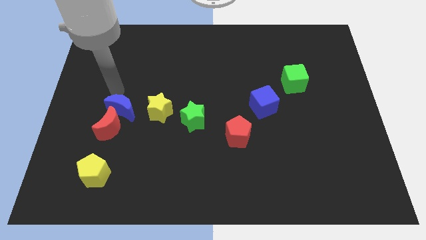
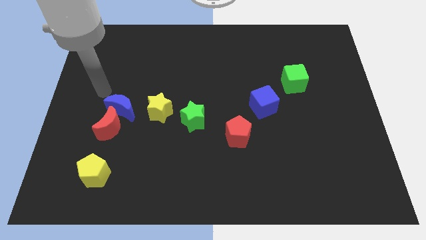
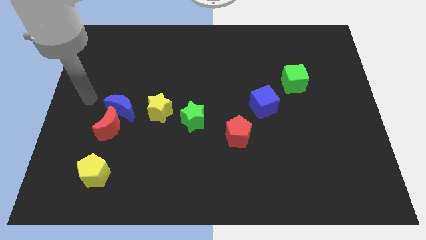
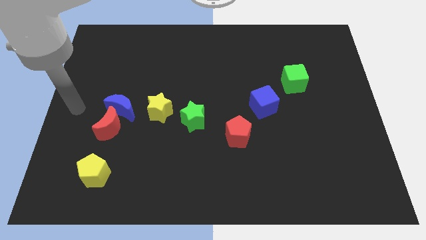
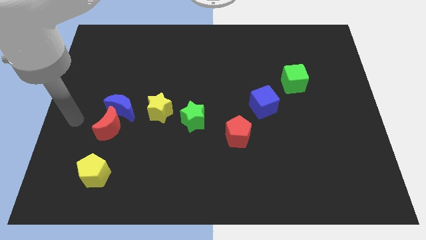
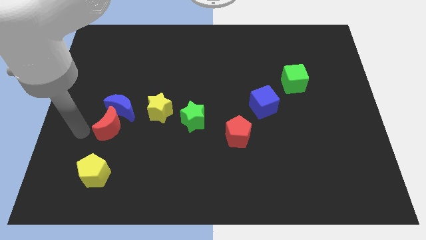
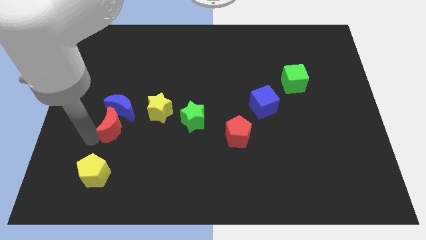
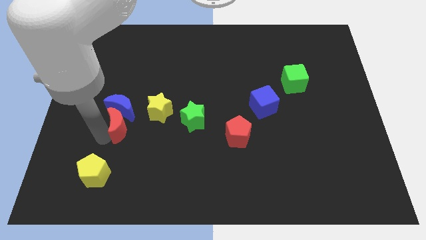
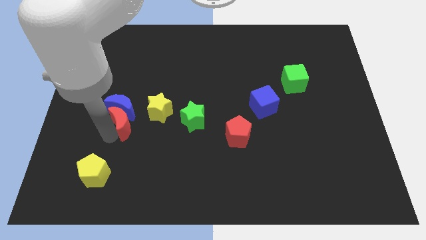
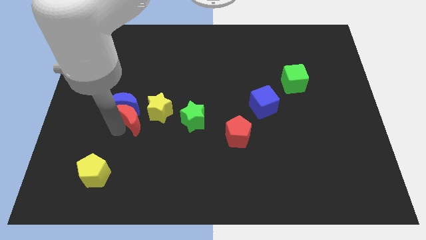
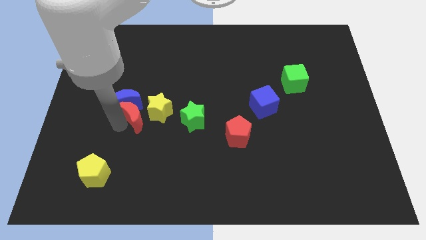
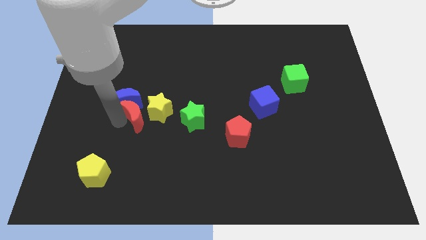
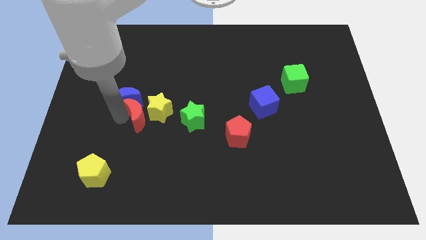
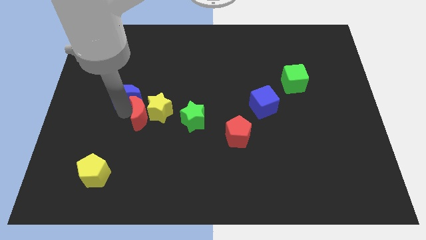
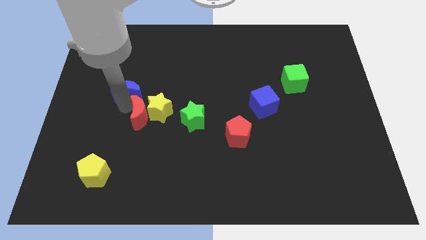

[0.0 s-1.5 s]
move the red crescent close to the left side of the yellow star

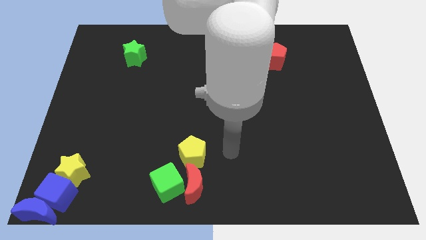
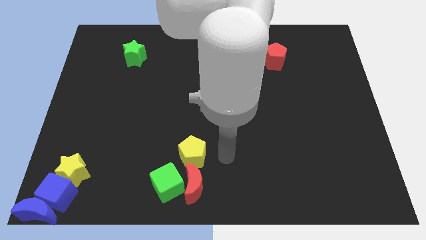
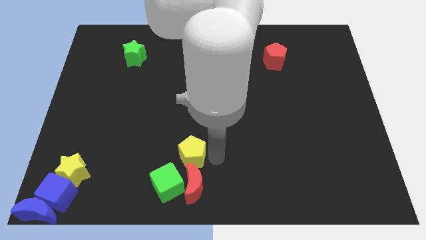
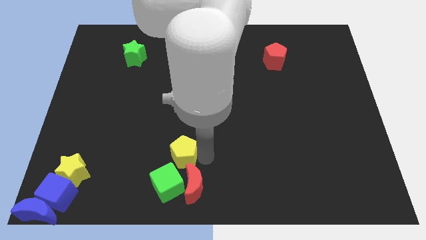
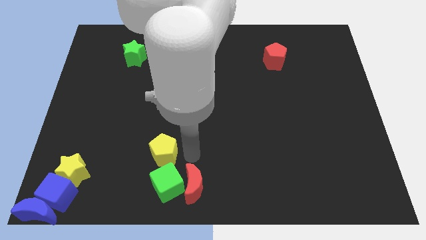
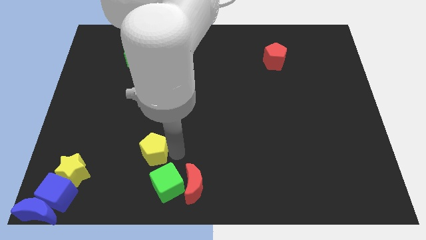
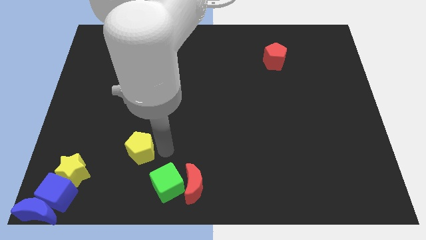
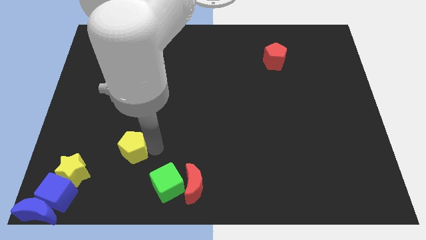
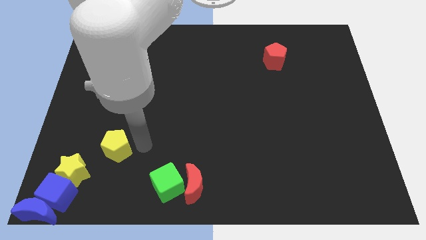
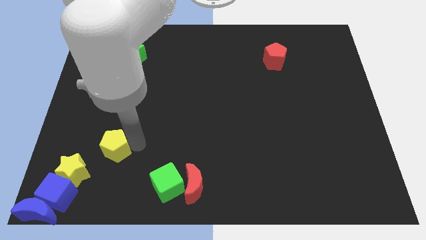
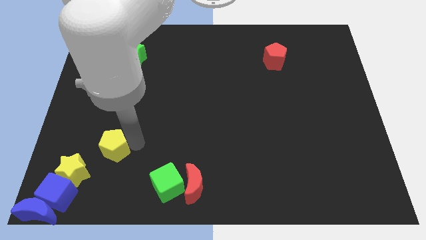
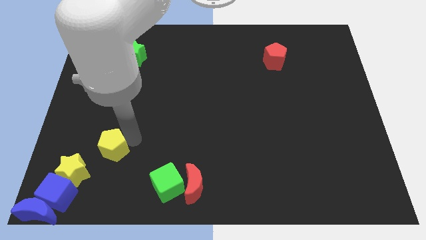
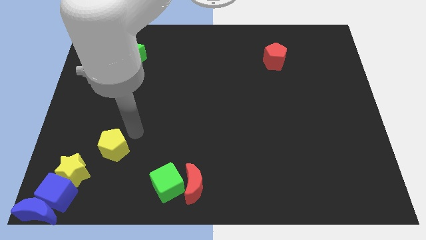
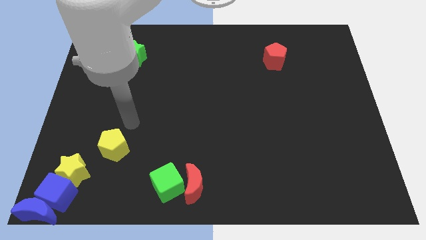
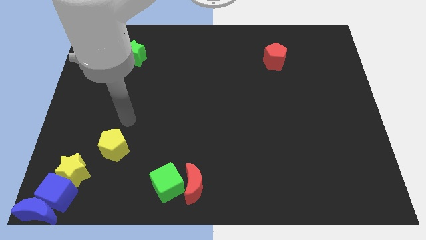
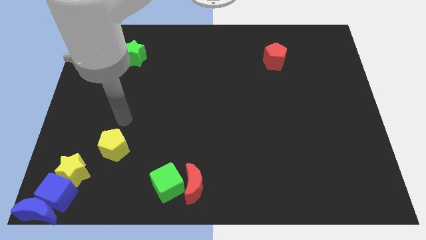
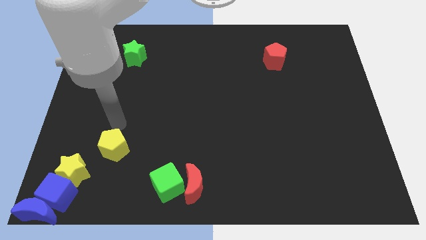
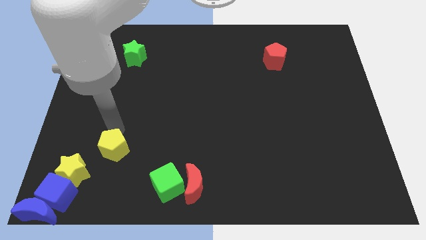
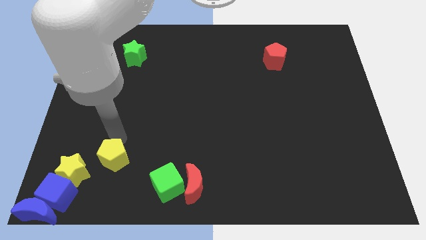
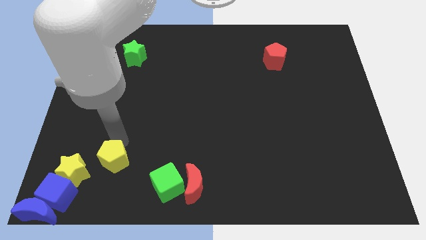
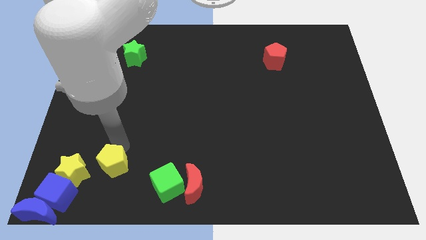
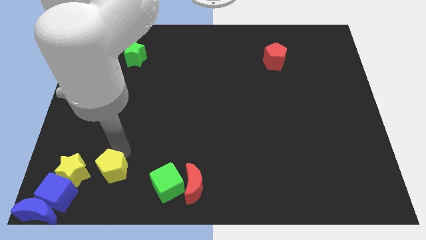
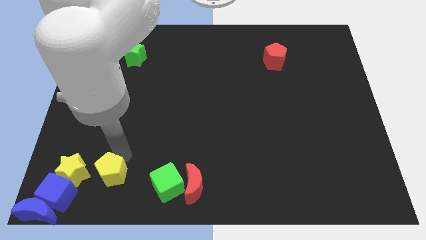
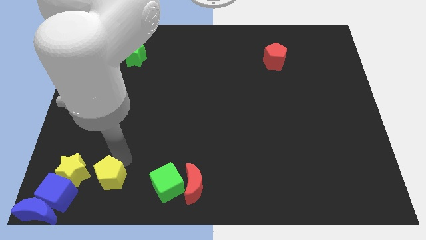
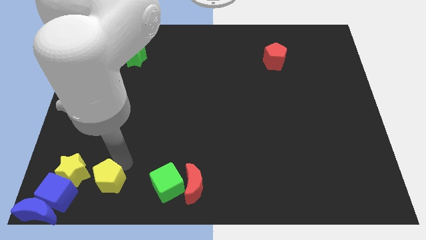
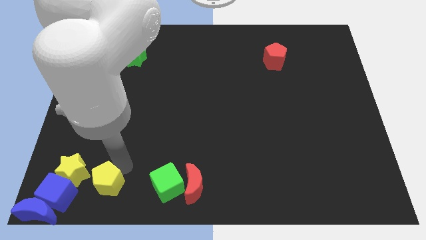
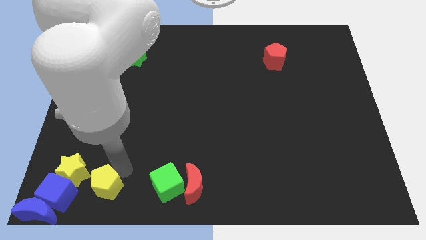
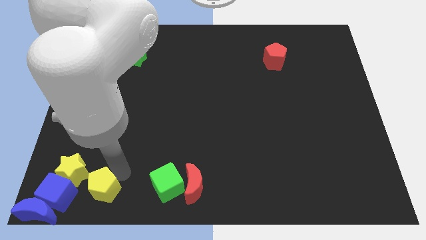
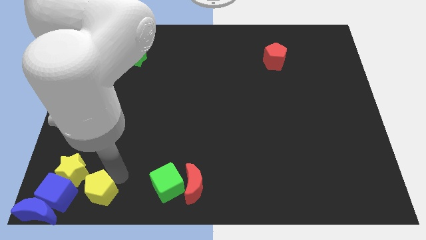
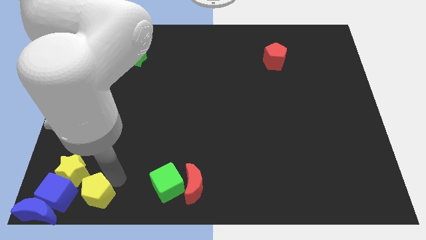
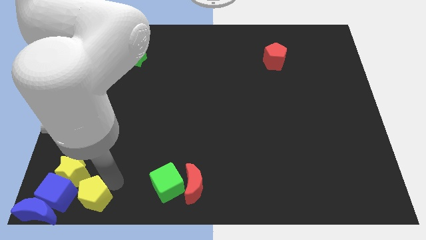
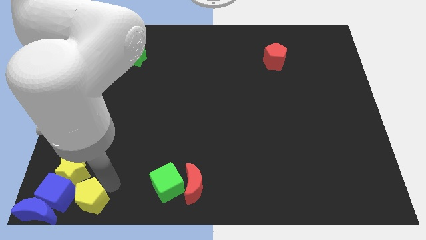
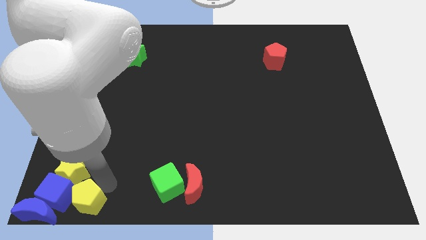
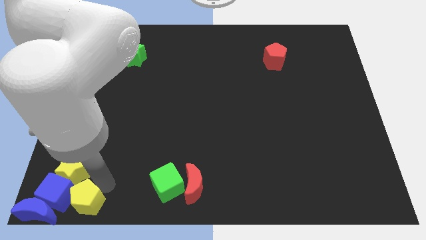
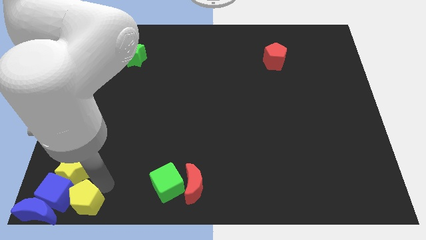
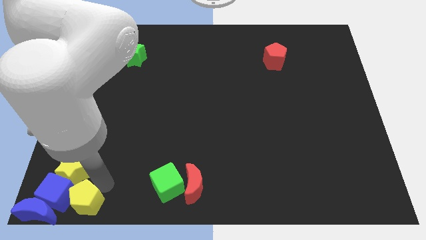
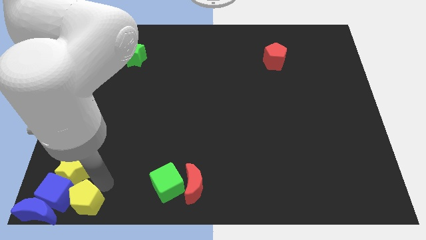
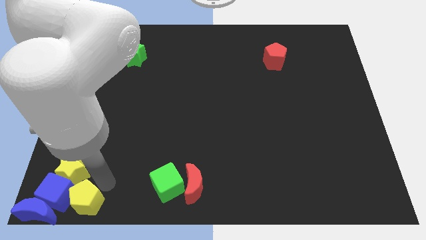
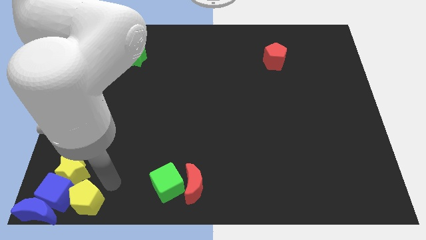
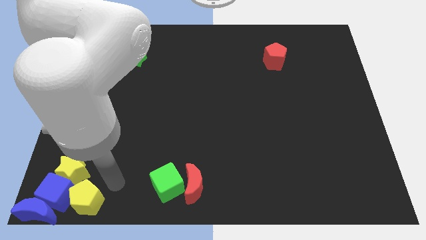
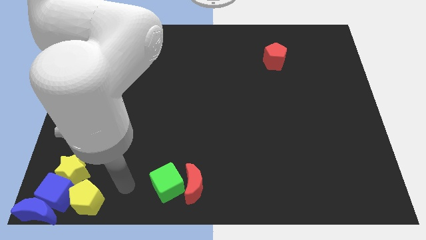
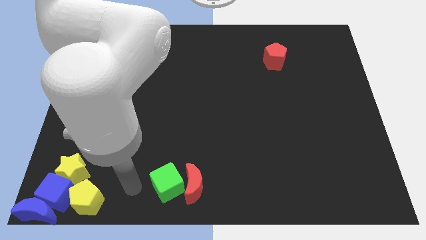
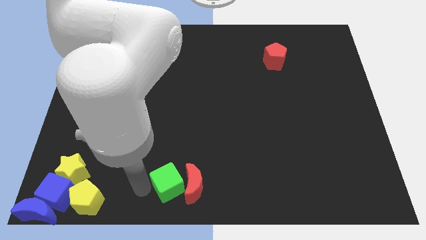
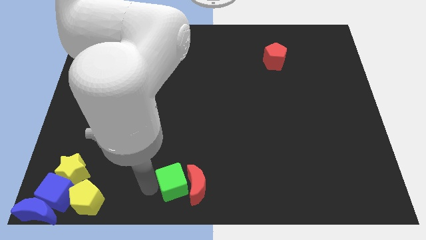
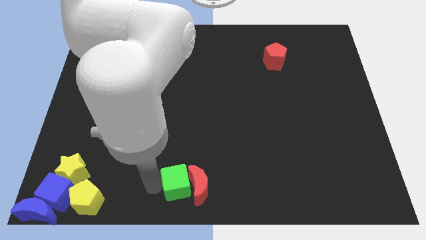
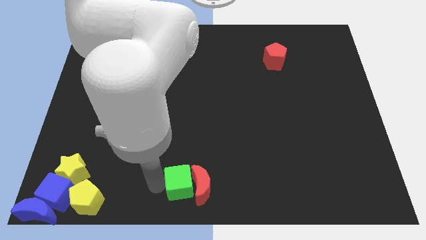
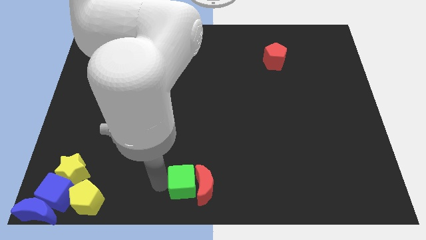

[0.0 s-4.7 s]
separate the yellow pentagon from red moon

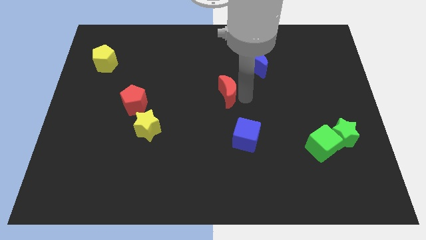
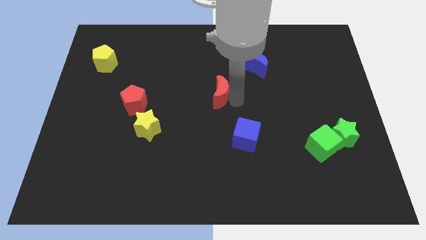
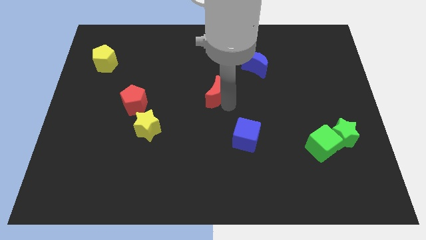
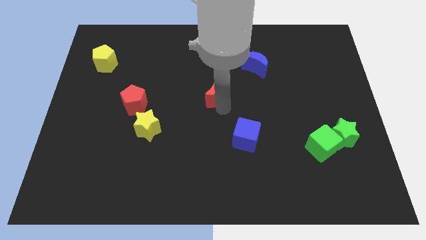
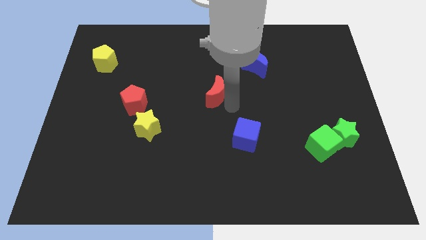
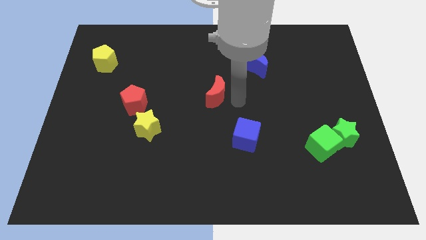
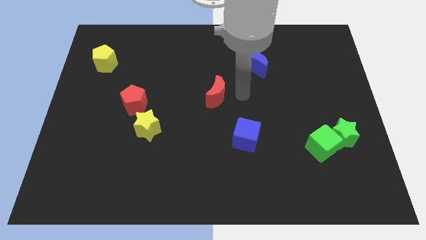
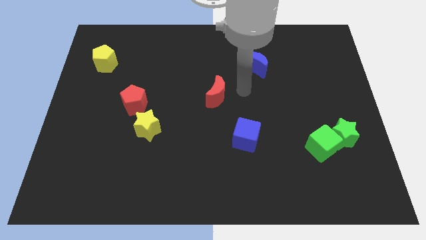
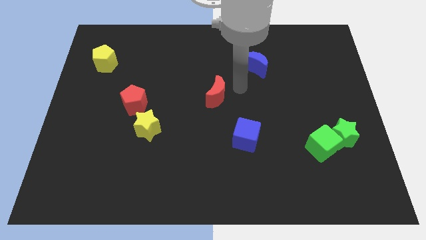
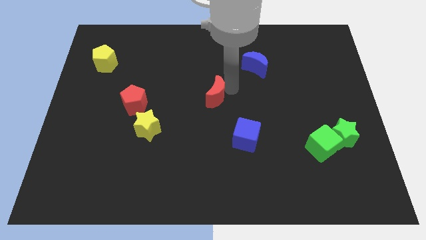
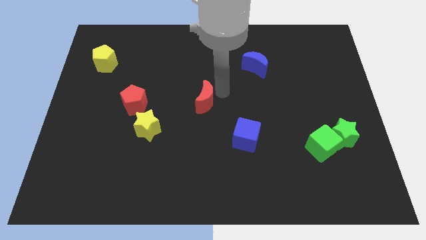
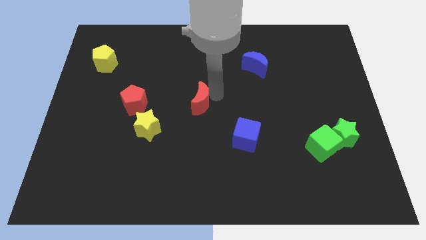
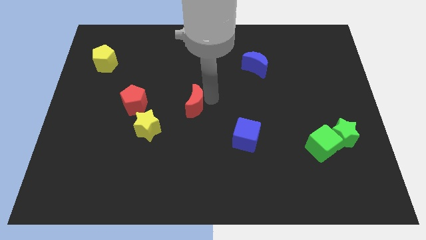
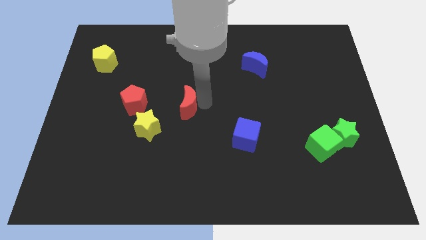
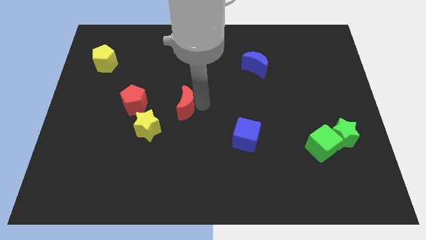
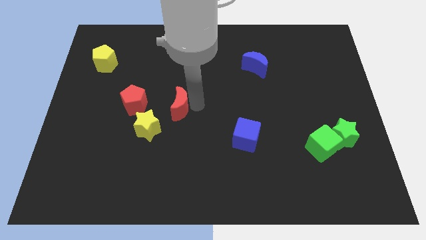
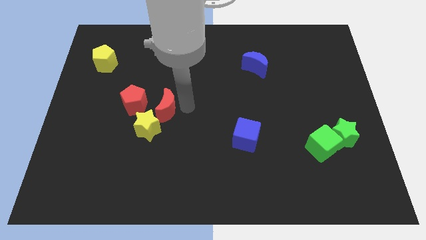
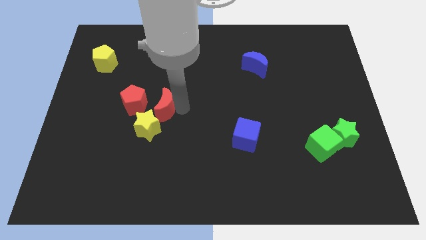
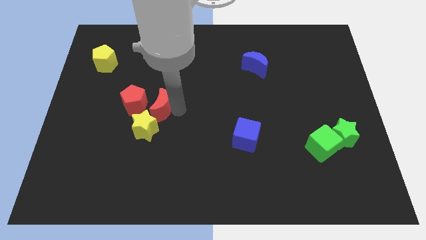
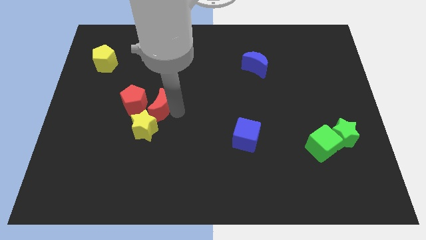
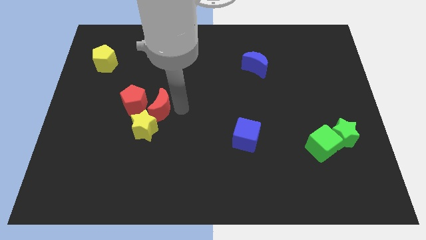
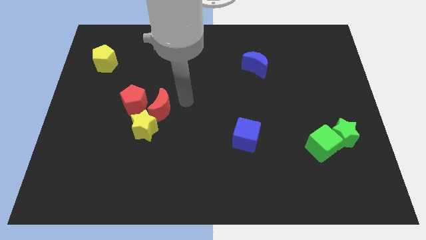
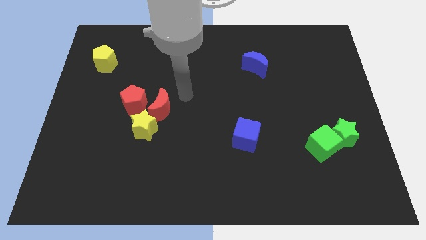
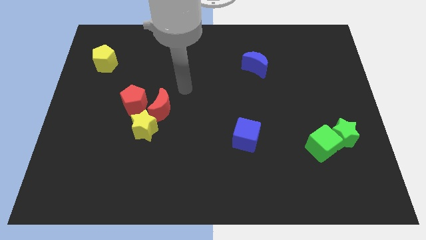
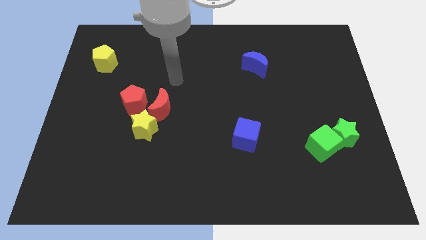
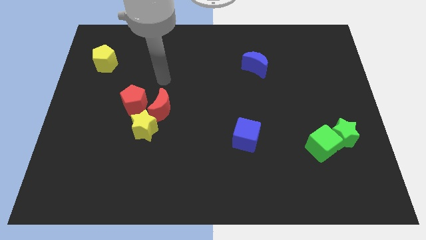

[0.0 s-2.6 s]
push the red moon into the yellow star
